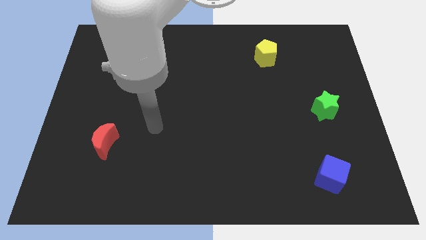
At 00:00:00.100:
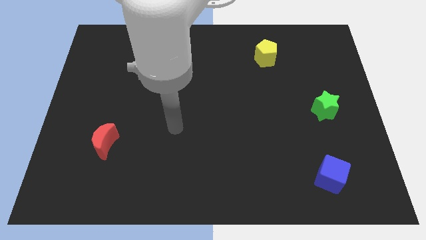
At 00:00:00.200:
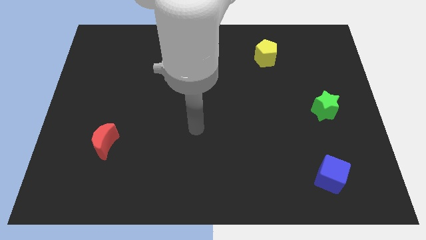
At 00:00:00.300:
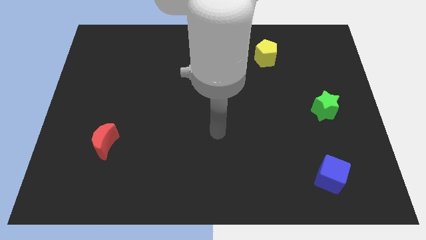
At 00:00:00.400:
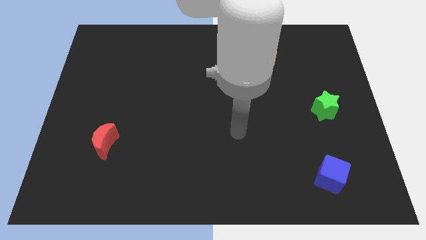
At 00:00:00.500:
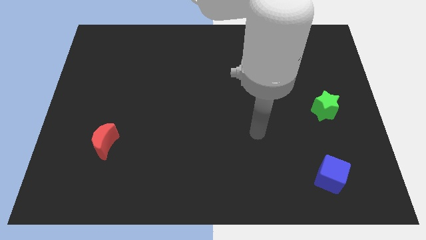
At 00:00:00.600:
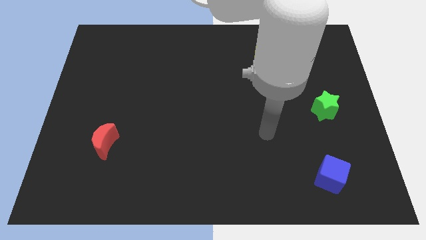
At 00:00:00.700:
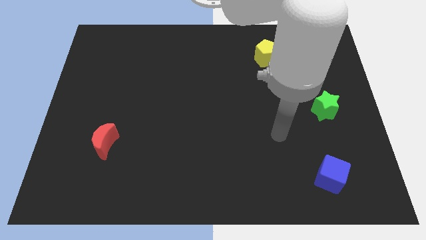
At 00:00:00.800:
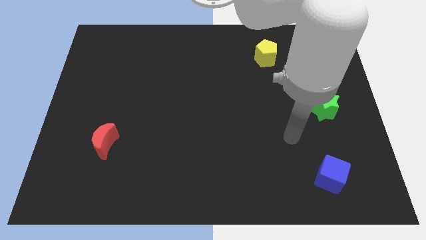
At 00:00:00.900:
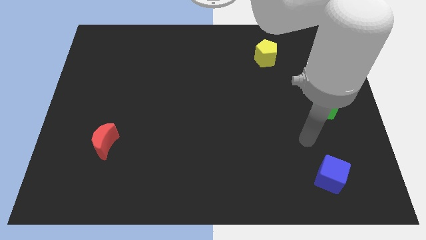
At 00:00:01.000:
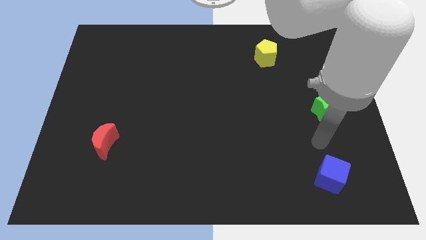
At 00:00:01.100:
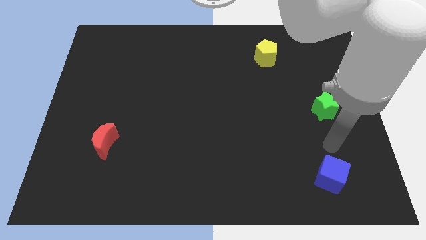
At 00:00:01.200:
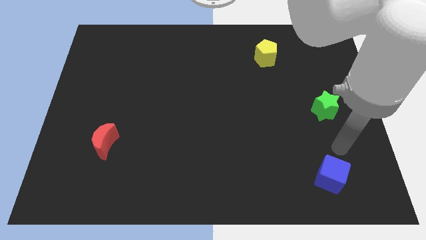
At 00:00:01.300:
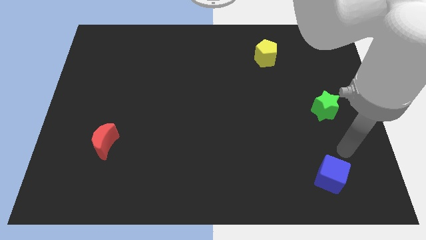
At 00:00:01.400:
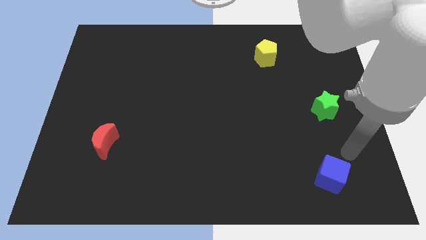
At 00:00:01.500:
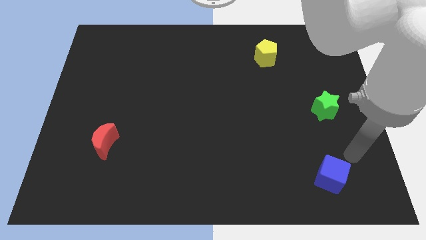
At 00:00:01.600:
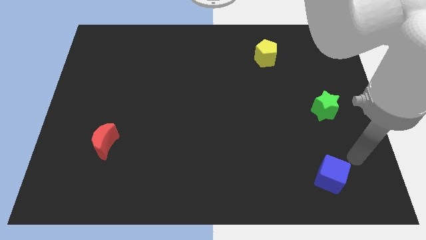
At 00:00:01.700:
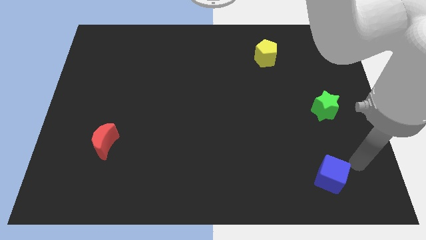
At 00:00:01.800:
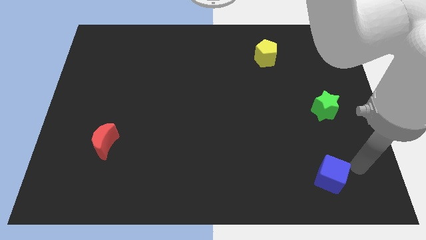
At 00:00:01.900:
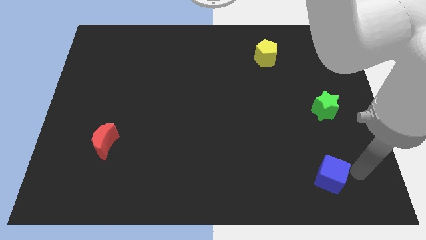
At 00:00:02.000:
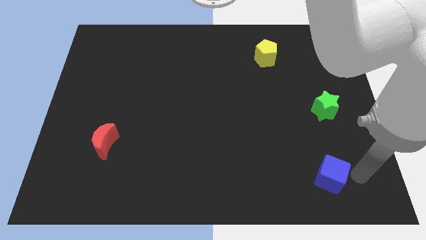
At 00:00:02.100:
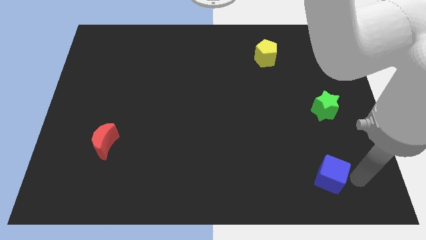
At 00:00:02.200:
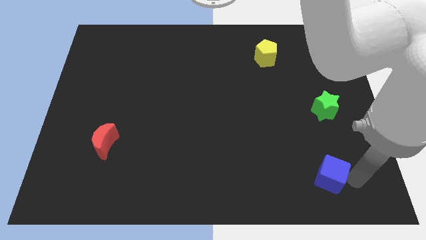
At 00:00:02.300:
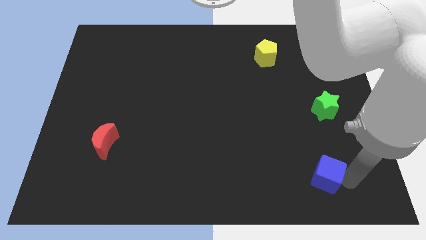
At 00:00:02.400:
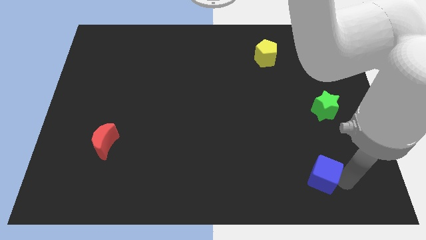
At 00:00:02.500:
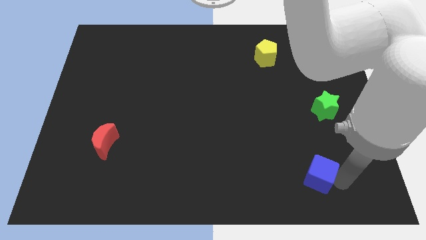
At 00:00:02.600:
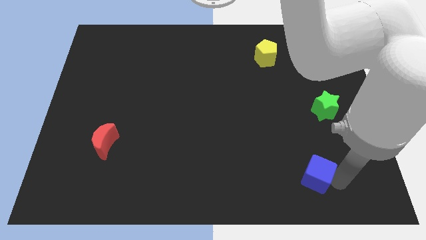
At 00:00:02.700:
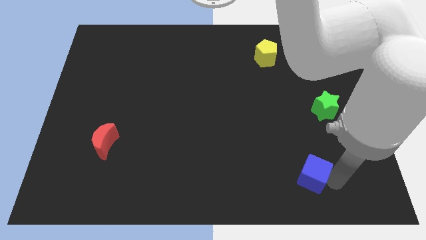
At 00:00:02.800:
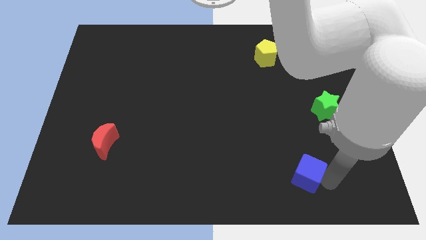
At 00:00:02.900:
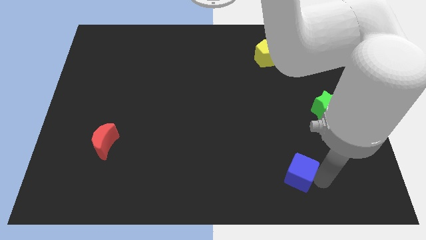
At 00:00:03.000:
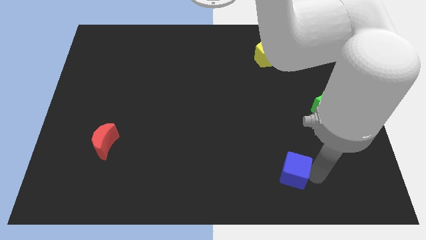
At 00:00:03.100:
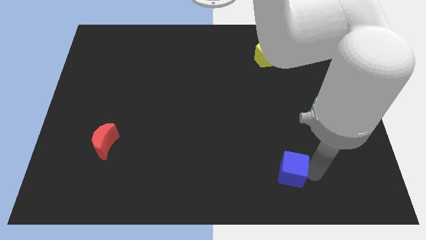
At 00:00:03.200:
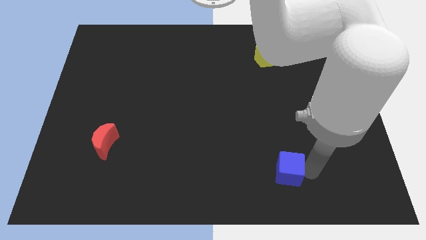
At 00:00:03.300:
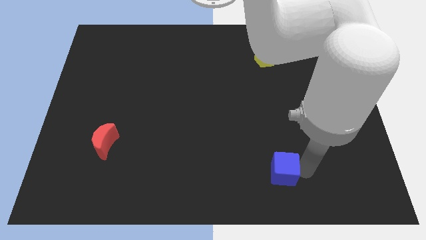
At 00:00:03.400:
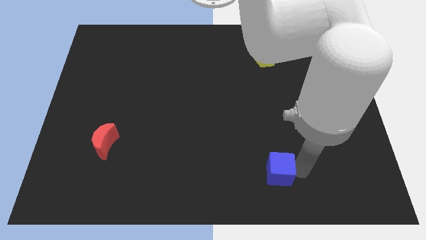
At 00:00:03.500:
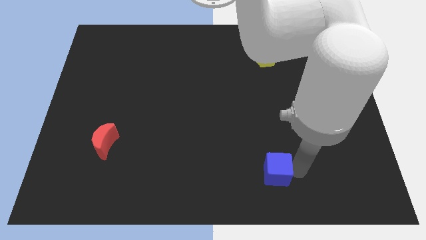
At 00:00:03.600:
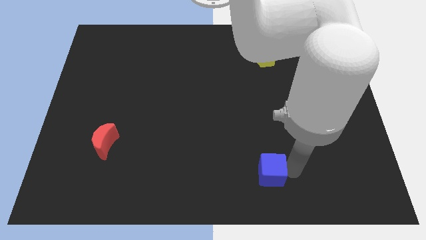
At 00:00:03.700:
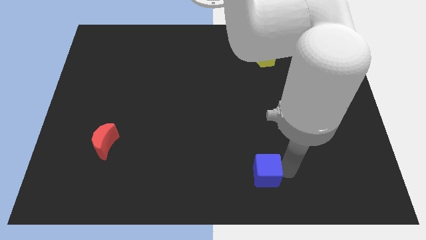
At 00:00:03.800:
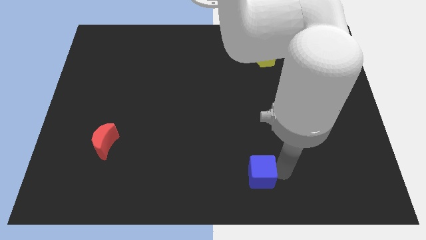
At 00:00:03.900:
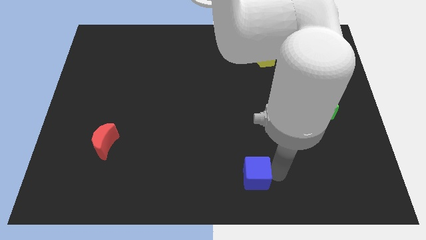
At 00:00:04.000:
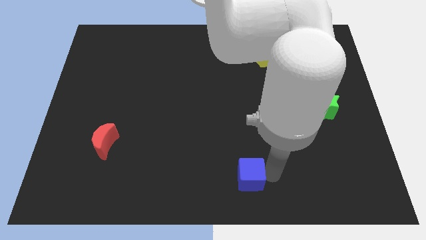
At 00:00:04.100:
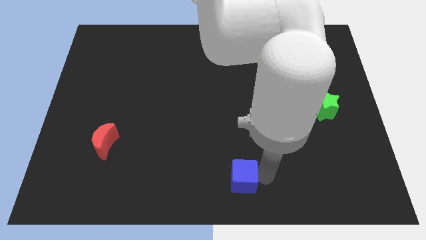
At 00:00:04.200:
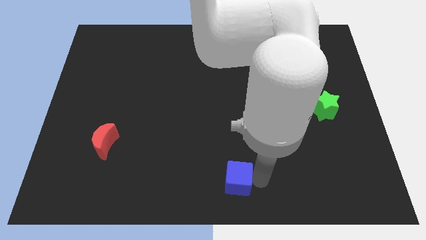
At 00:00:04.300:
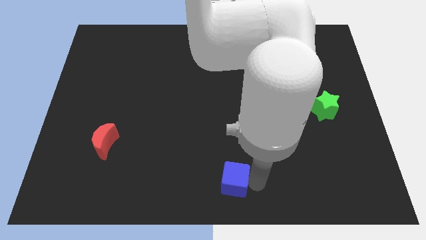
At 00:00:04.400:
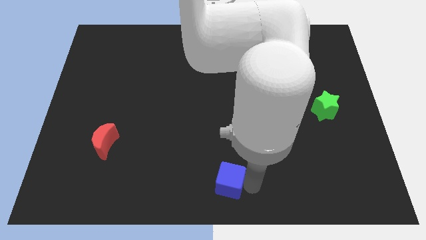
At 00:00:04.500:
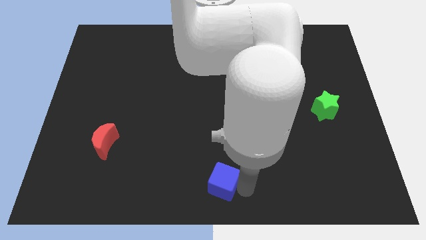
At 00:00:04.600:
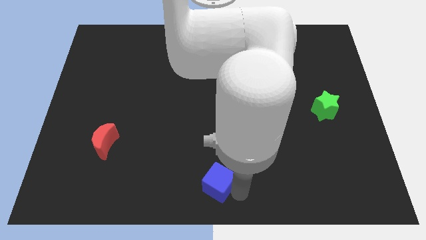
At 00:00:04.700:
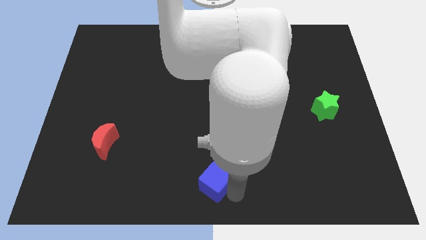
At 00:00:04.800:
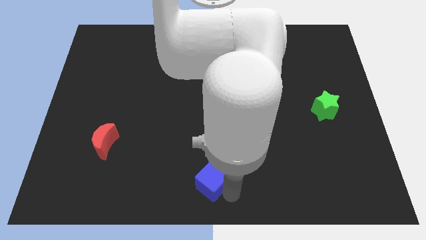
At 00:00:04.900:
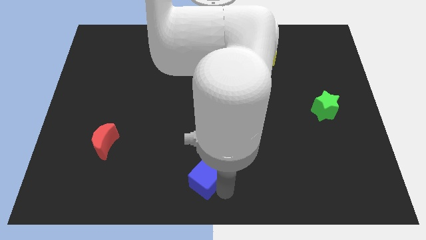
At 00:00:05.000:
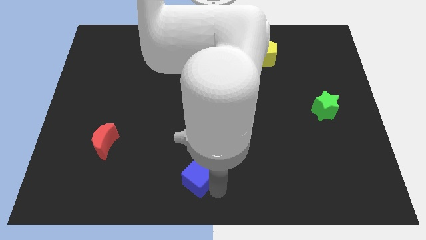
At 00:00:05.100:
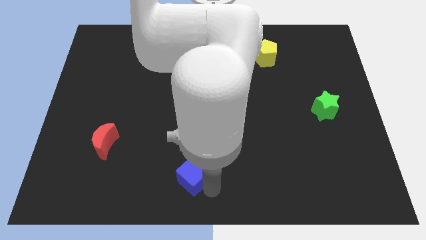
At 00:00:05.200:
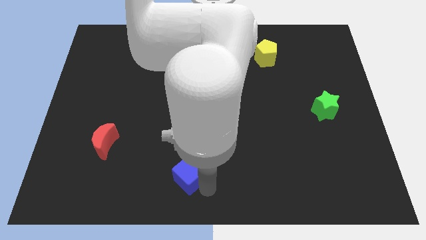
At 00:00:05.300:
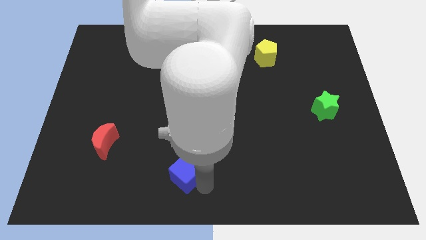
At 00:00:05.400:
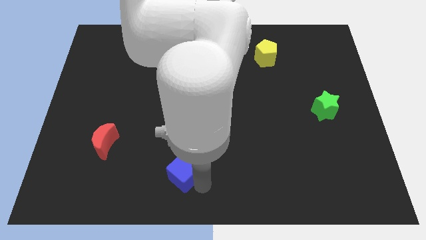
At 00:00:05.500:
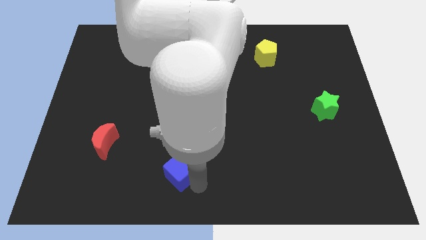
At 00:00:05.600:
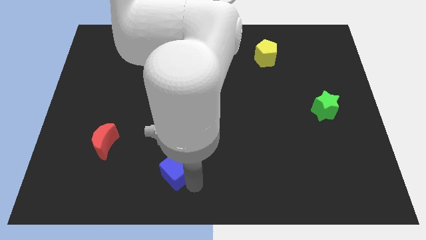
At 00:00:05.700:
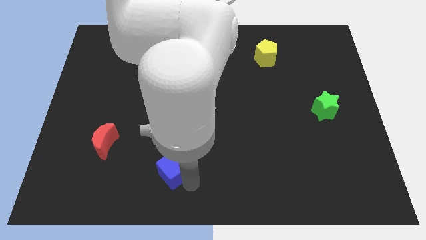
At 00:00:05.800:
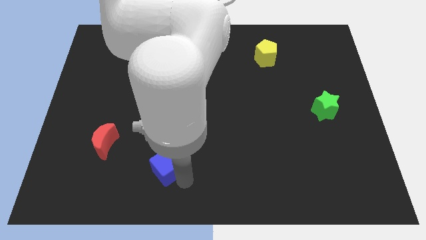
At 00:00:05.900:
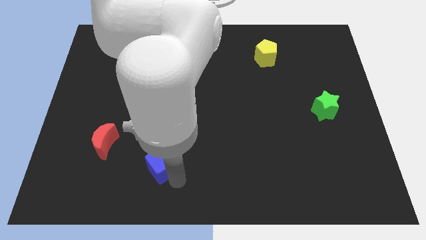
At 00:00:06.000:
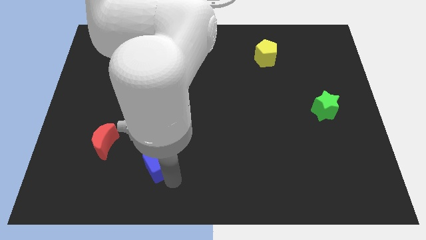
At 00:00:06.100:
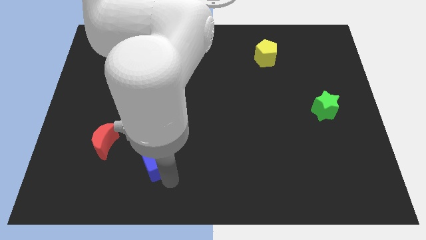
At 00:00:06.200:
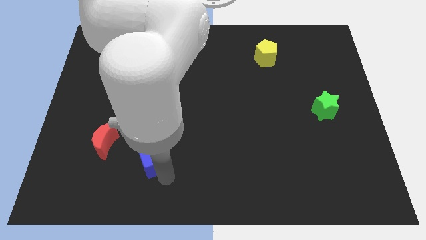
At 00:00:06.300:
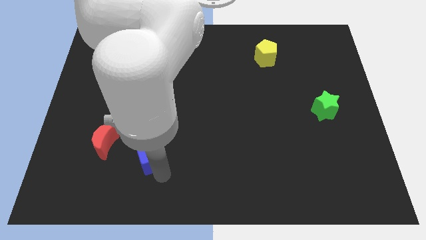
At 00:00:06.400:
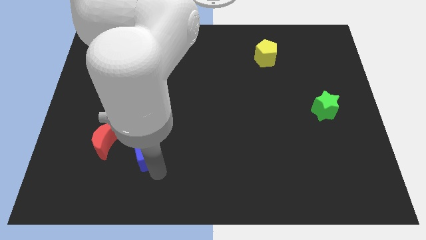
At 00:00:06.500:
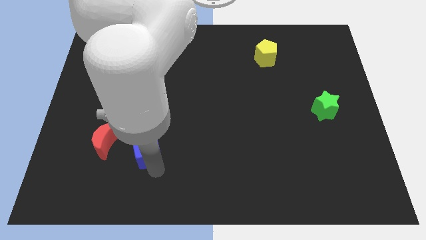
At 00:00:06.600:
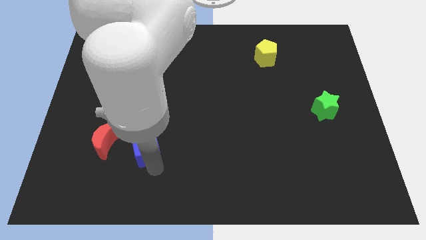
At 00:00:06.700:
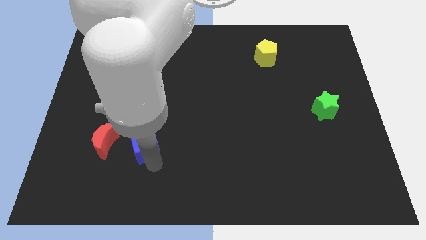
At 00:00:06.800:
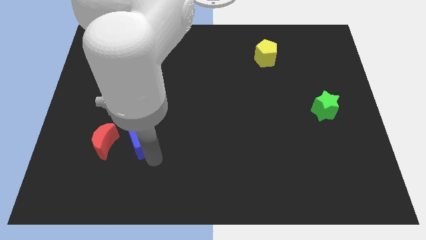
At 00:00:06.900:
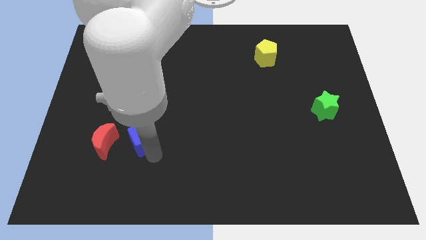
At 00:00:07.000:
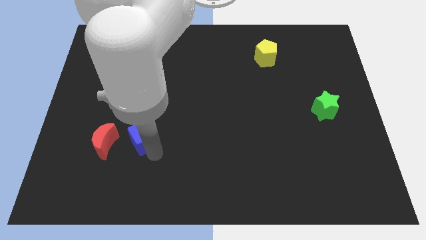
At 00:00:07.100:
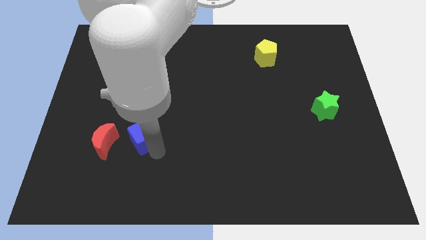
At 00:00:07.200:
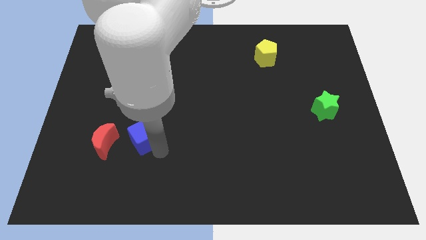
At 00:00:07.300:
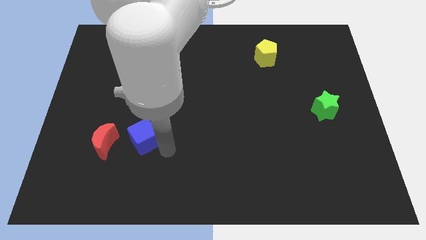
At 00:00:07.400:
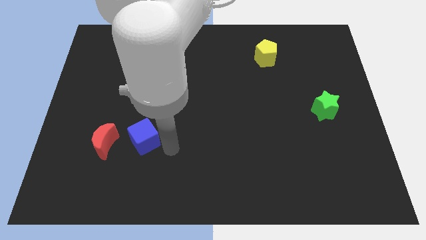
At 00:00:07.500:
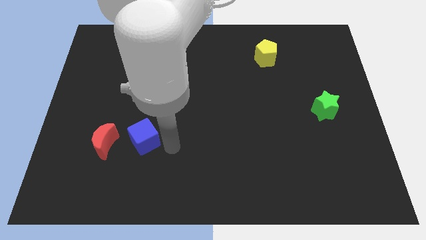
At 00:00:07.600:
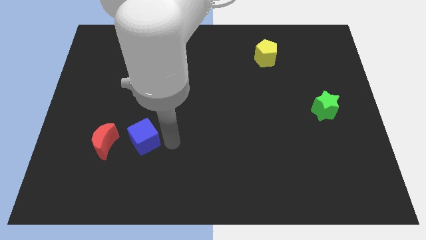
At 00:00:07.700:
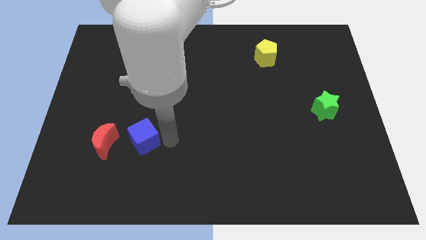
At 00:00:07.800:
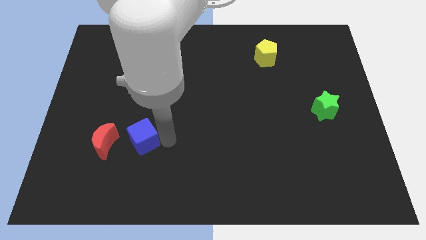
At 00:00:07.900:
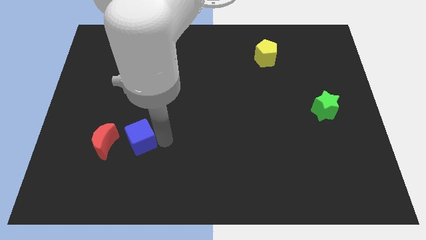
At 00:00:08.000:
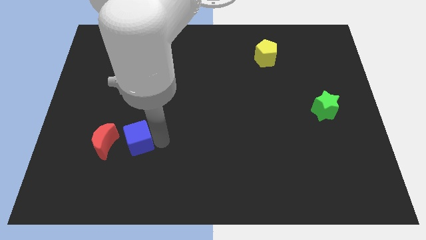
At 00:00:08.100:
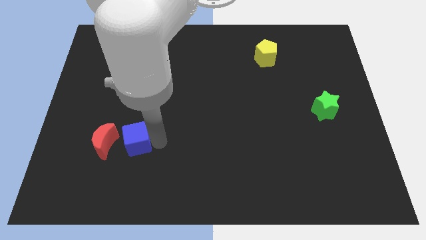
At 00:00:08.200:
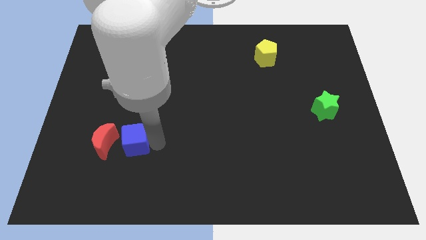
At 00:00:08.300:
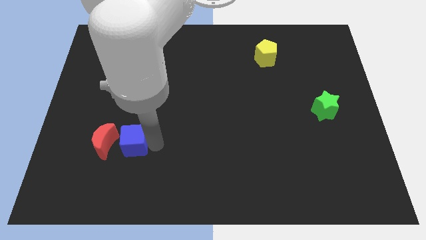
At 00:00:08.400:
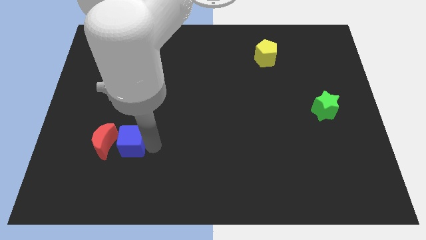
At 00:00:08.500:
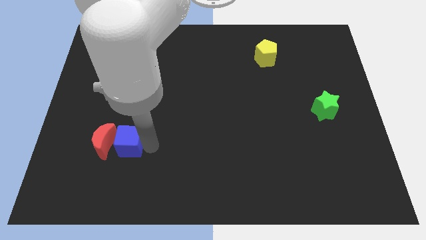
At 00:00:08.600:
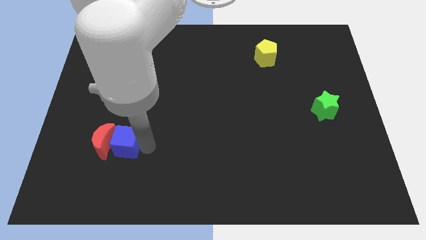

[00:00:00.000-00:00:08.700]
slide the blue cube next to the moon
